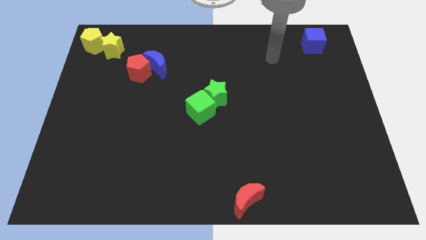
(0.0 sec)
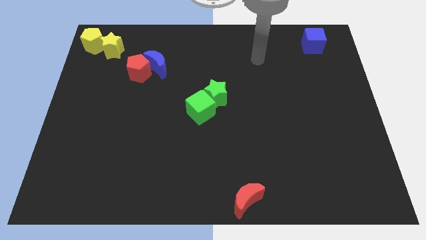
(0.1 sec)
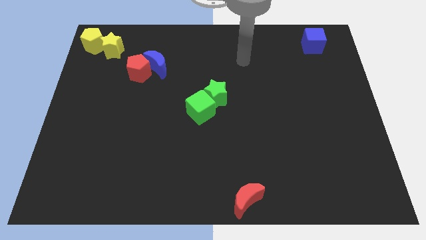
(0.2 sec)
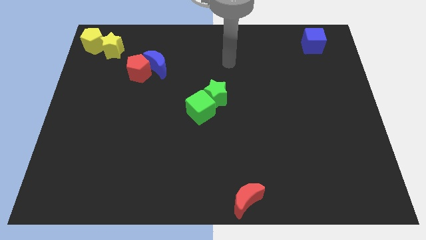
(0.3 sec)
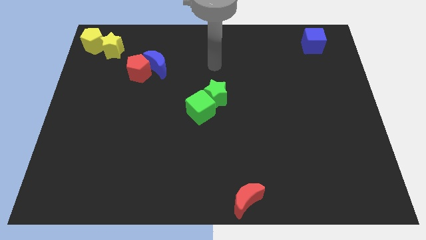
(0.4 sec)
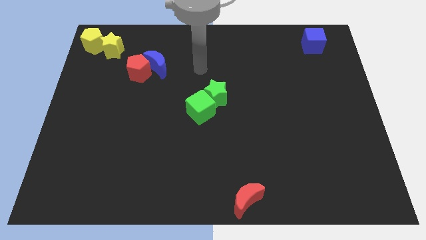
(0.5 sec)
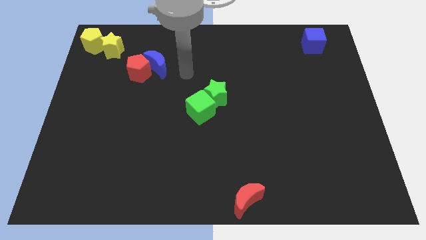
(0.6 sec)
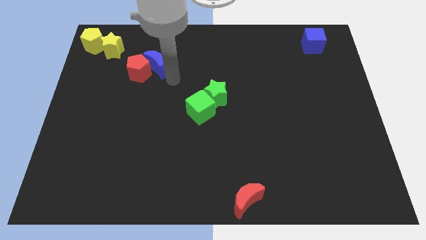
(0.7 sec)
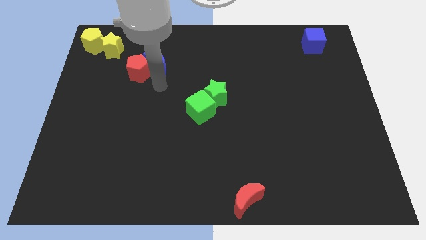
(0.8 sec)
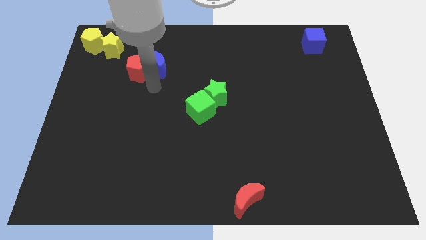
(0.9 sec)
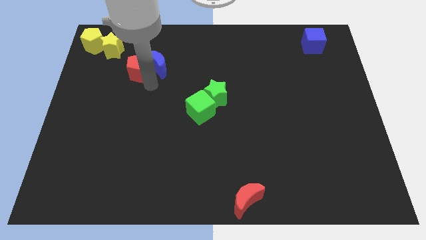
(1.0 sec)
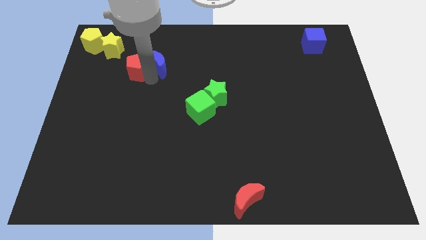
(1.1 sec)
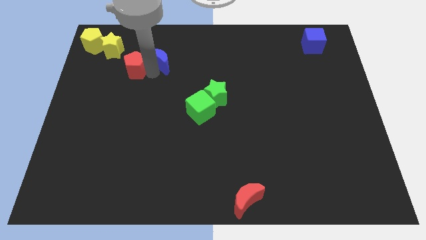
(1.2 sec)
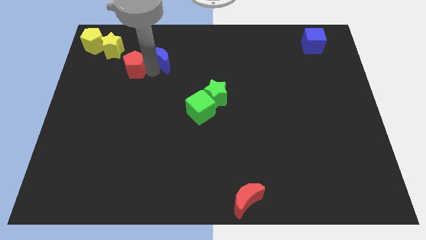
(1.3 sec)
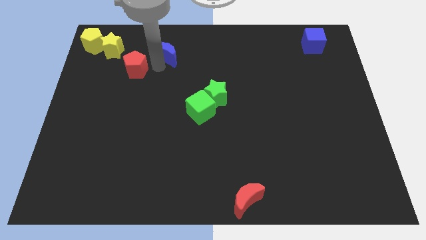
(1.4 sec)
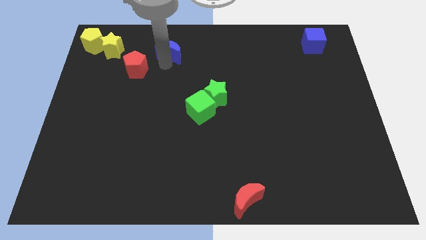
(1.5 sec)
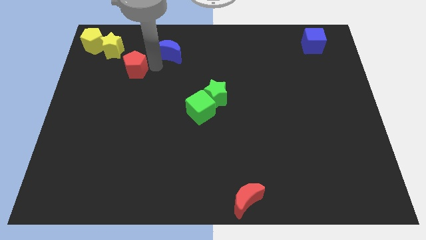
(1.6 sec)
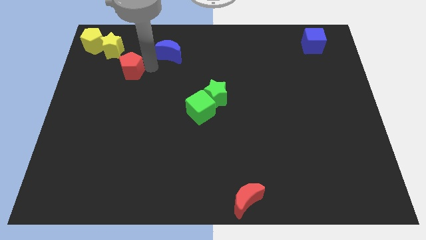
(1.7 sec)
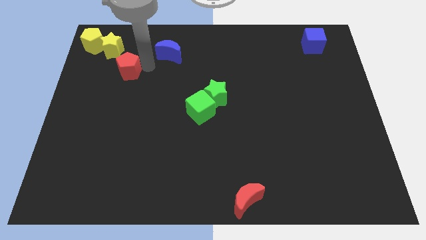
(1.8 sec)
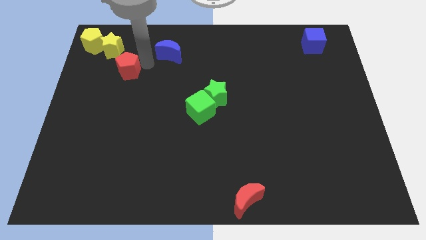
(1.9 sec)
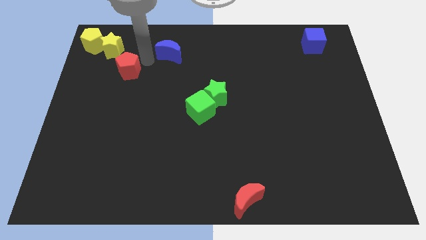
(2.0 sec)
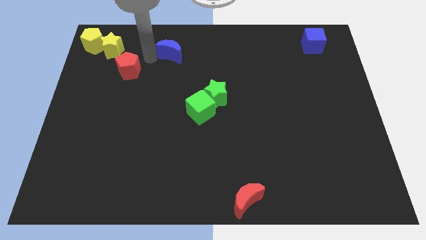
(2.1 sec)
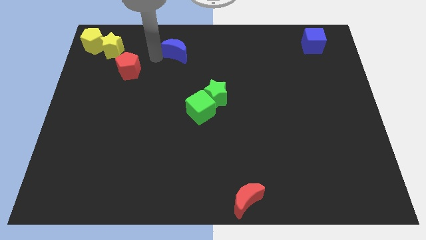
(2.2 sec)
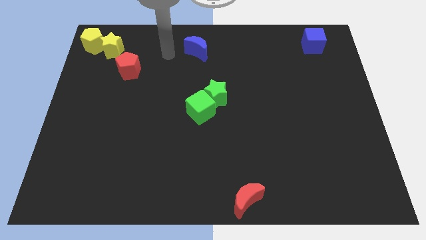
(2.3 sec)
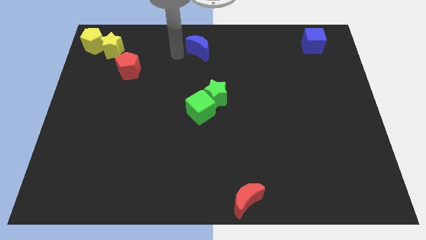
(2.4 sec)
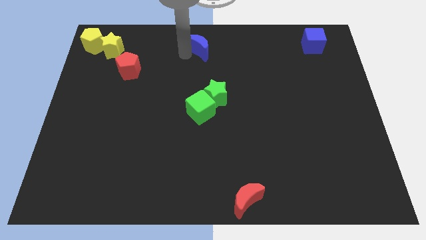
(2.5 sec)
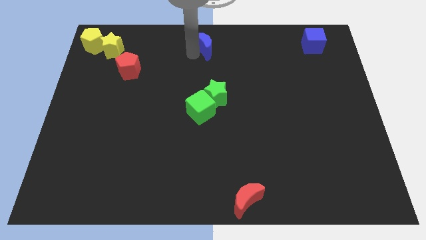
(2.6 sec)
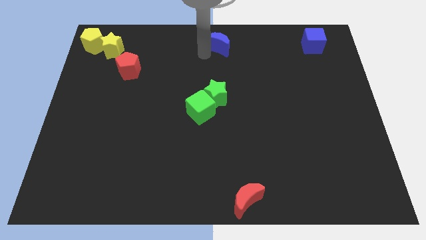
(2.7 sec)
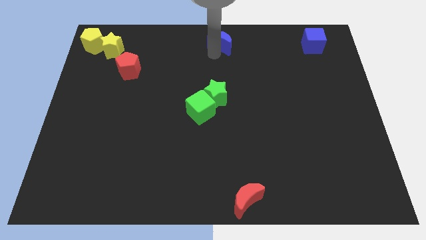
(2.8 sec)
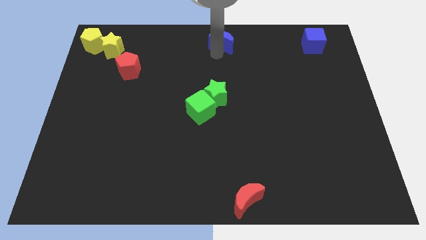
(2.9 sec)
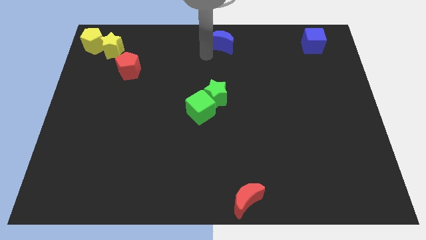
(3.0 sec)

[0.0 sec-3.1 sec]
move blue moon to the top center of the board

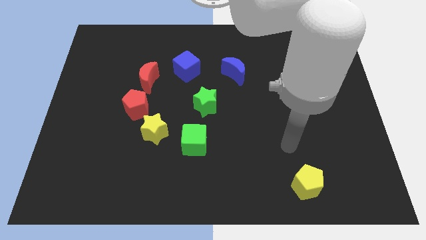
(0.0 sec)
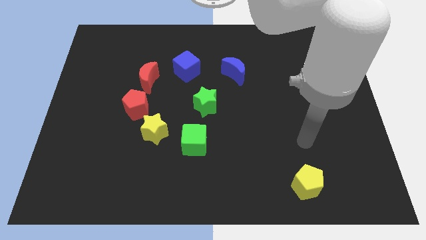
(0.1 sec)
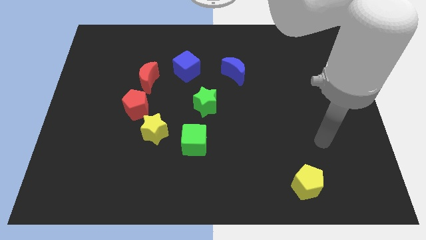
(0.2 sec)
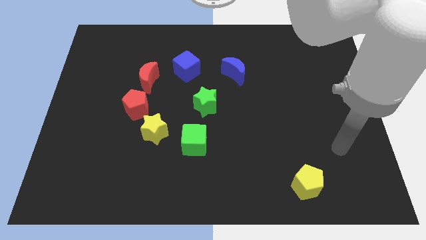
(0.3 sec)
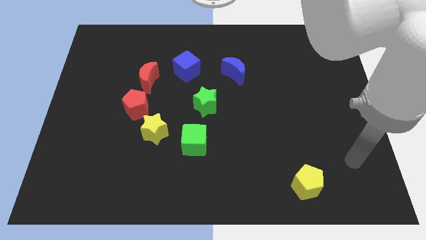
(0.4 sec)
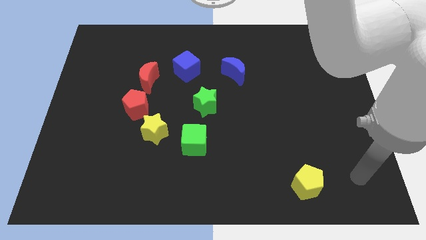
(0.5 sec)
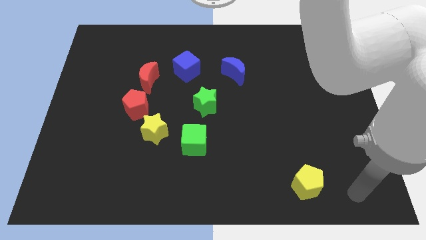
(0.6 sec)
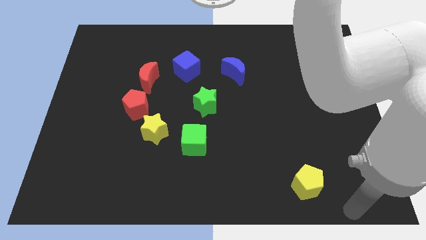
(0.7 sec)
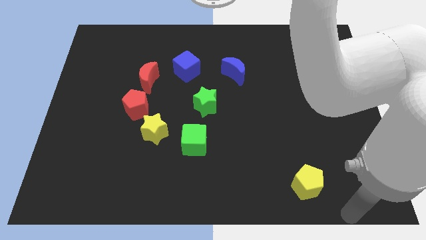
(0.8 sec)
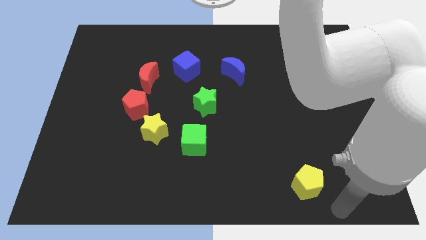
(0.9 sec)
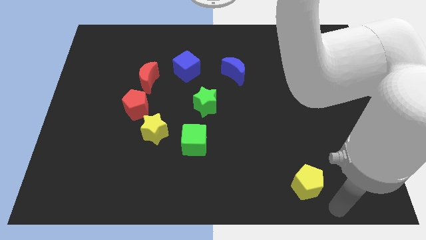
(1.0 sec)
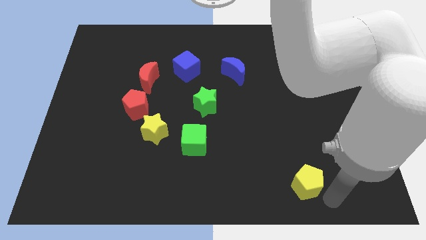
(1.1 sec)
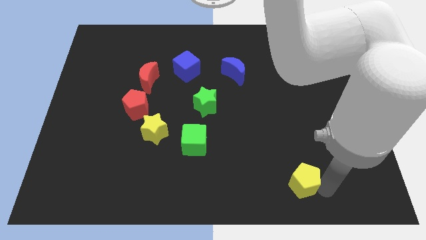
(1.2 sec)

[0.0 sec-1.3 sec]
place the arm right to the yellow pentagon

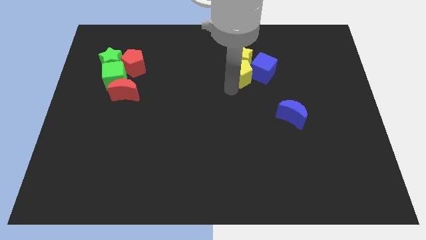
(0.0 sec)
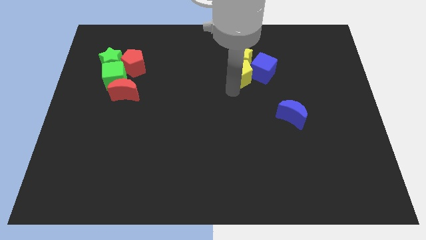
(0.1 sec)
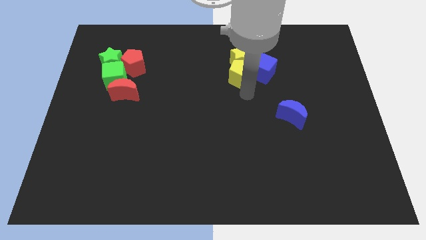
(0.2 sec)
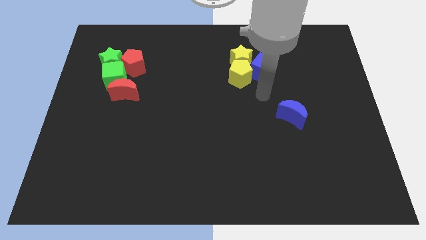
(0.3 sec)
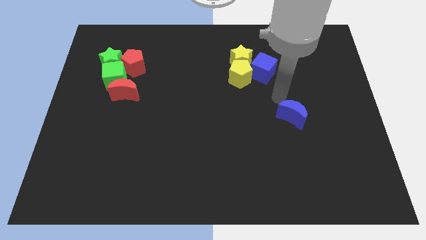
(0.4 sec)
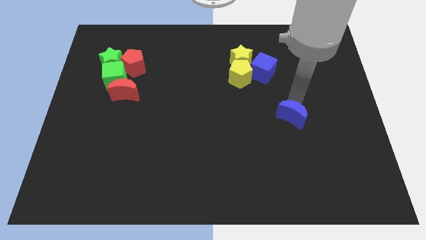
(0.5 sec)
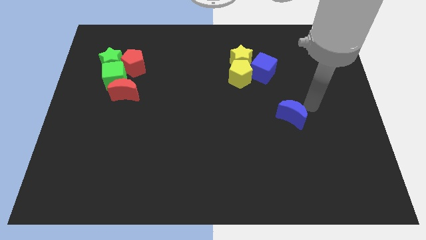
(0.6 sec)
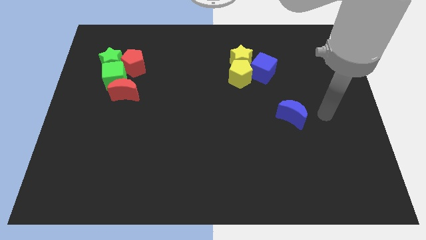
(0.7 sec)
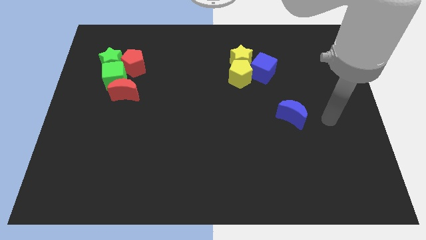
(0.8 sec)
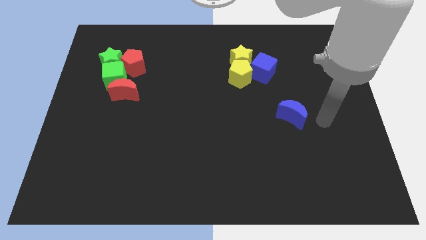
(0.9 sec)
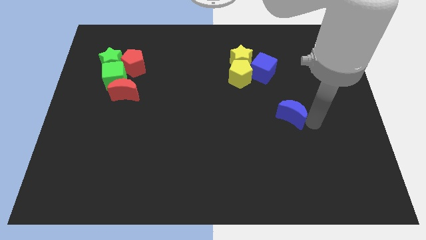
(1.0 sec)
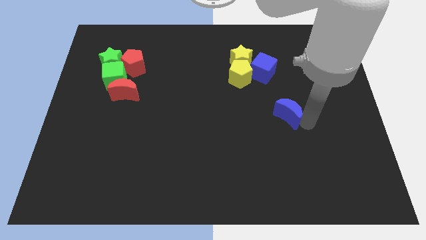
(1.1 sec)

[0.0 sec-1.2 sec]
move your hand away from yellow pentagon

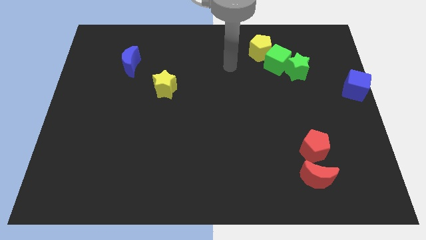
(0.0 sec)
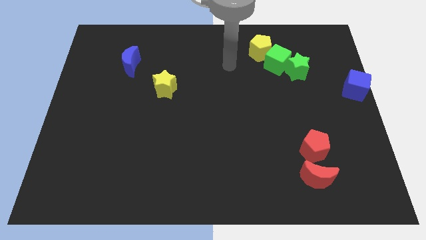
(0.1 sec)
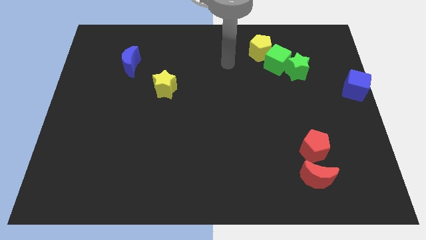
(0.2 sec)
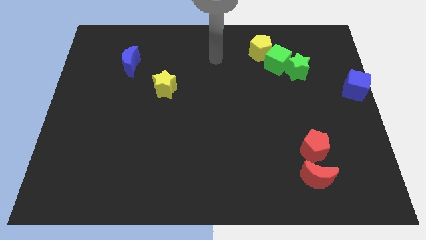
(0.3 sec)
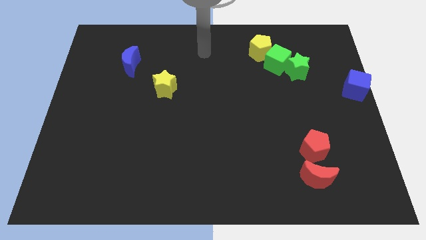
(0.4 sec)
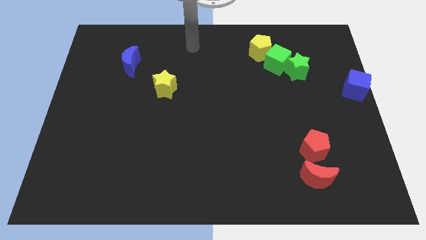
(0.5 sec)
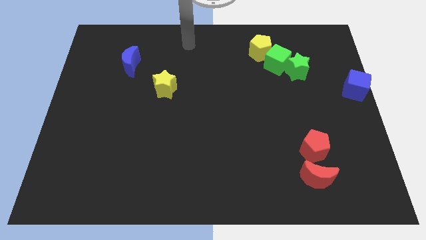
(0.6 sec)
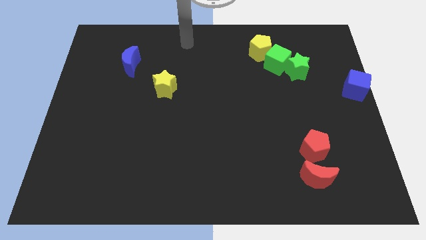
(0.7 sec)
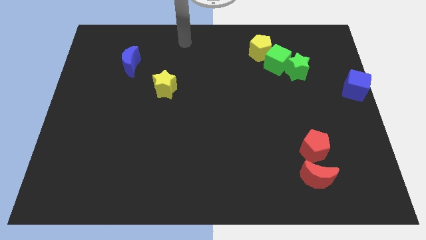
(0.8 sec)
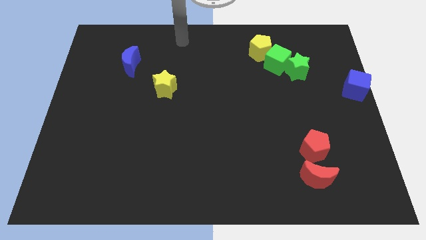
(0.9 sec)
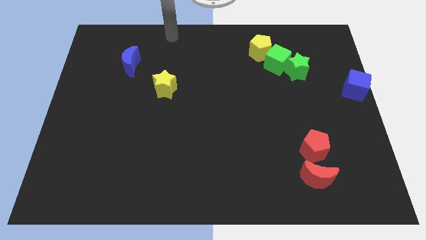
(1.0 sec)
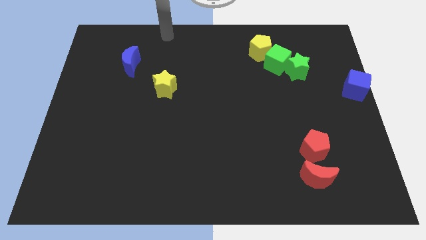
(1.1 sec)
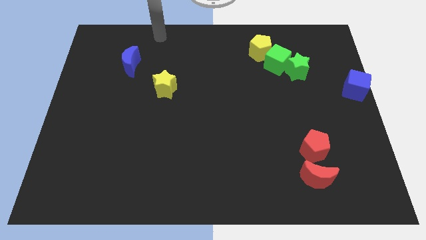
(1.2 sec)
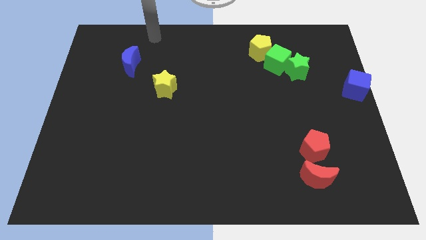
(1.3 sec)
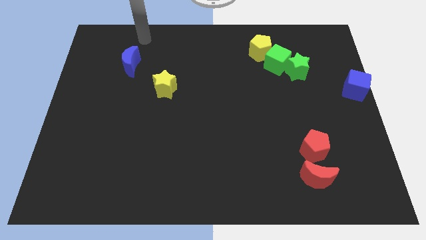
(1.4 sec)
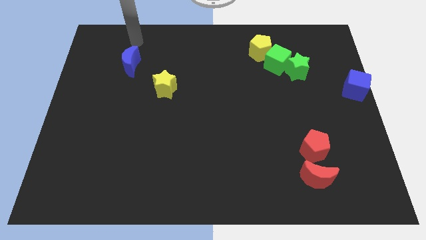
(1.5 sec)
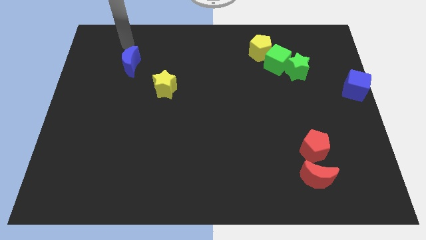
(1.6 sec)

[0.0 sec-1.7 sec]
point your arm to the top side of the blue moon

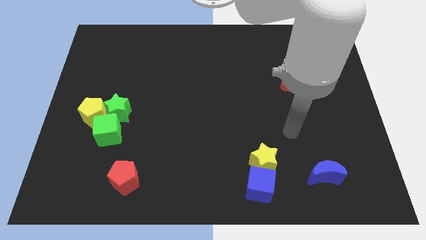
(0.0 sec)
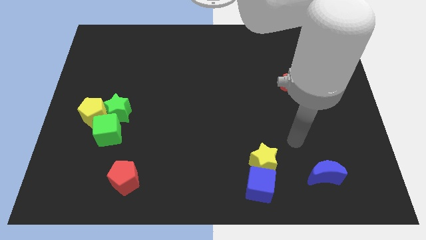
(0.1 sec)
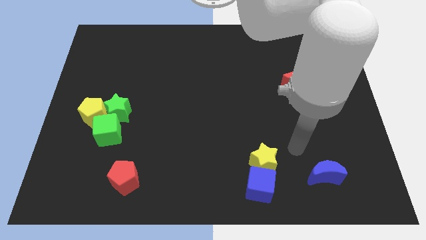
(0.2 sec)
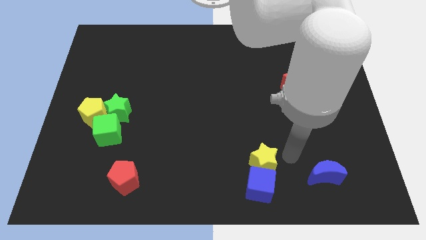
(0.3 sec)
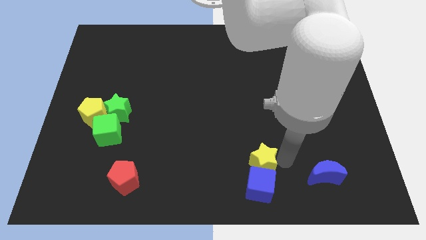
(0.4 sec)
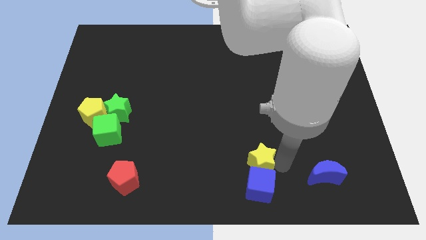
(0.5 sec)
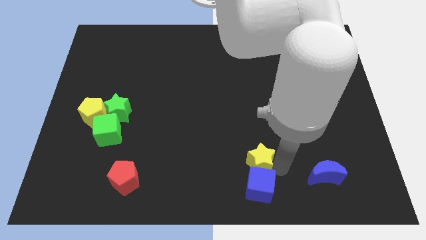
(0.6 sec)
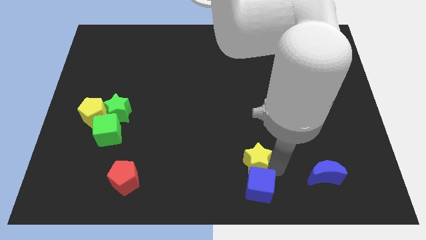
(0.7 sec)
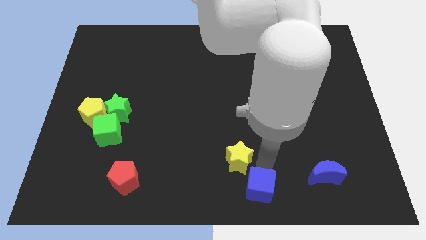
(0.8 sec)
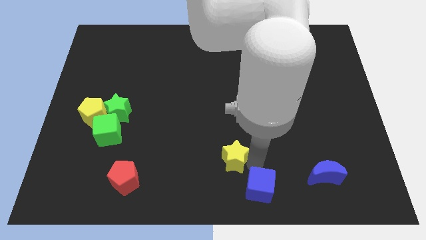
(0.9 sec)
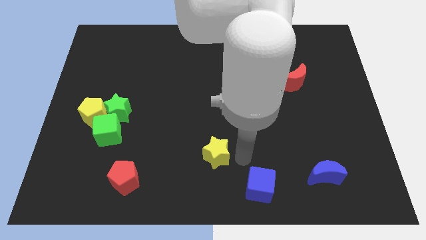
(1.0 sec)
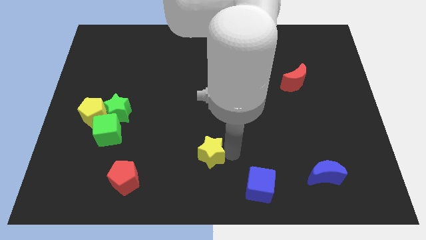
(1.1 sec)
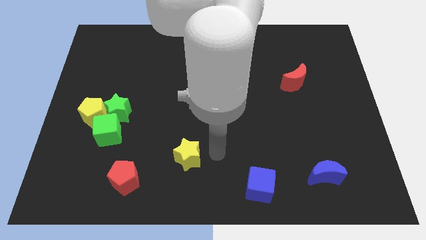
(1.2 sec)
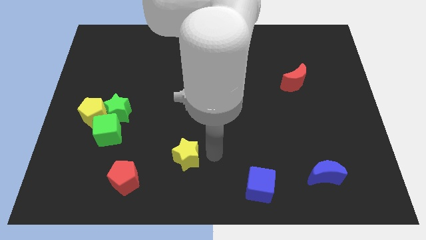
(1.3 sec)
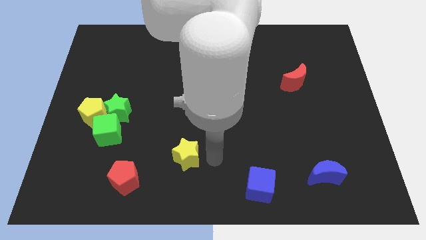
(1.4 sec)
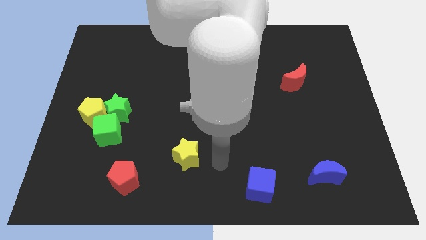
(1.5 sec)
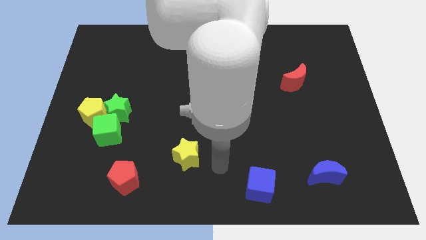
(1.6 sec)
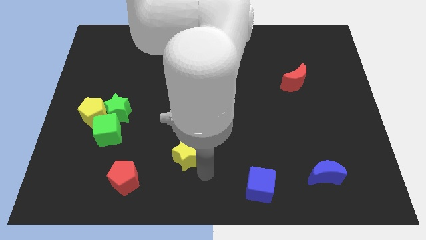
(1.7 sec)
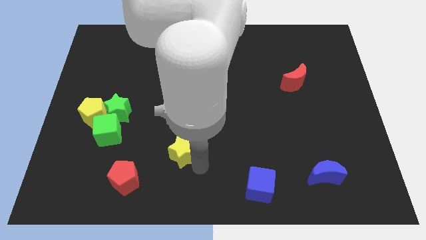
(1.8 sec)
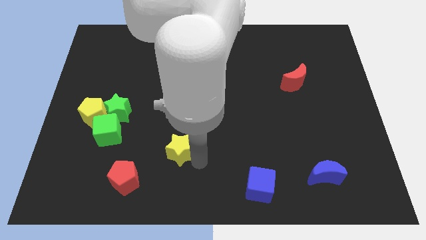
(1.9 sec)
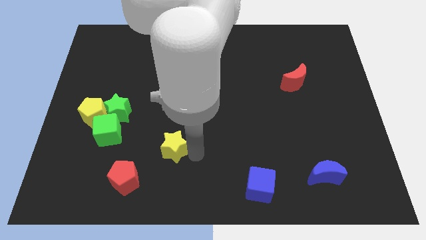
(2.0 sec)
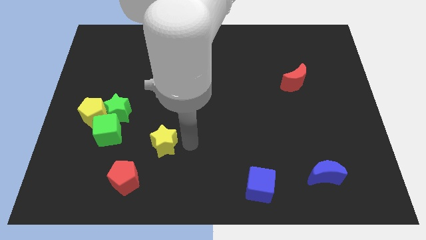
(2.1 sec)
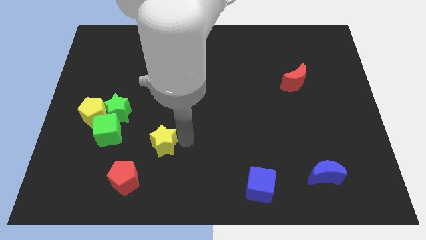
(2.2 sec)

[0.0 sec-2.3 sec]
push the yellow star towards the left side of the board
